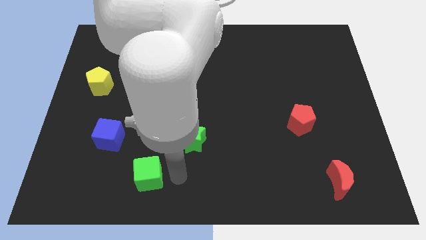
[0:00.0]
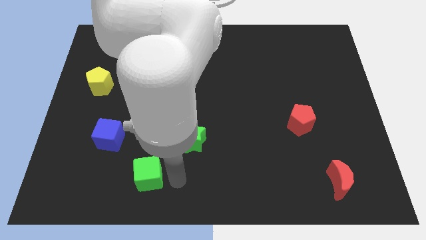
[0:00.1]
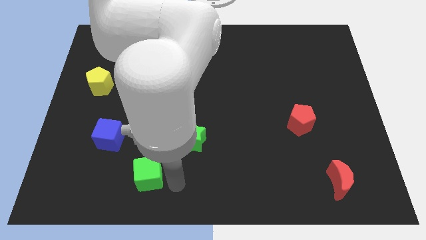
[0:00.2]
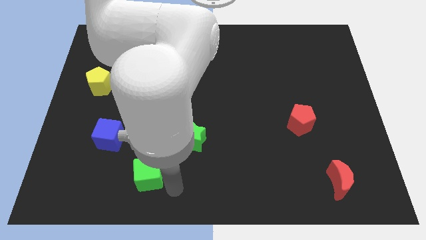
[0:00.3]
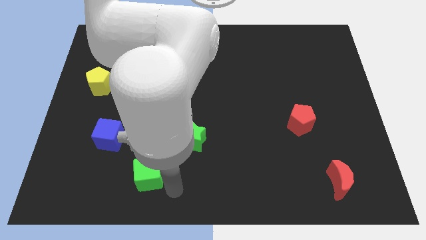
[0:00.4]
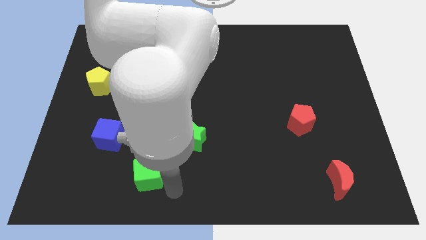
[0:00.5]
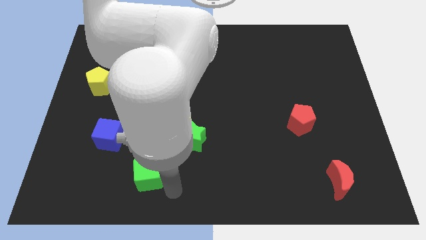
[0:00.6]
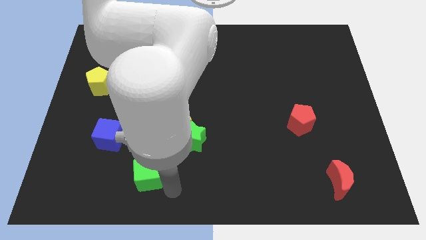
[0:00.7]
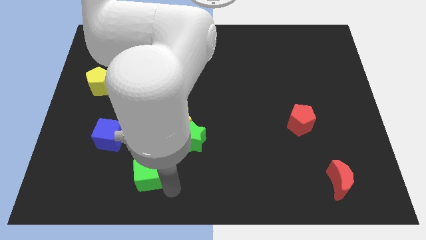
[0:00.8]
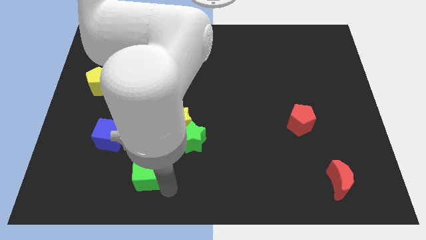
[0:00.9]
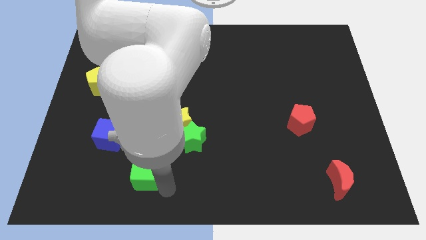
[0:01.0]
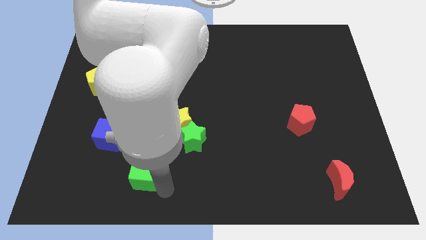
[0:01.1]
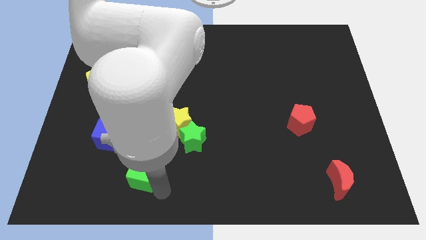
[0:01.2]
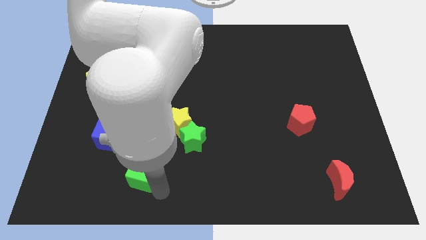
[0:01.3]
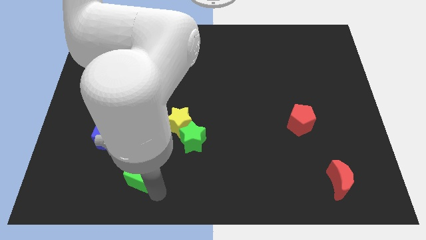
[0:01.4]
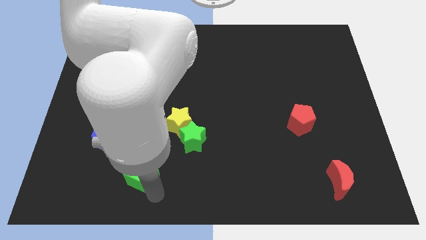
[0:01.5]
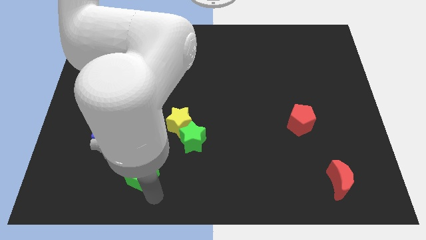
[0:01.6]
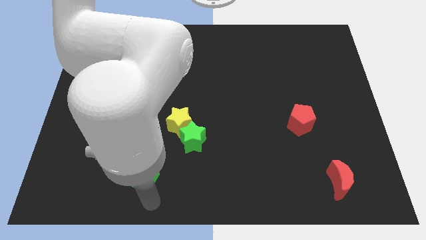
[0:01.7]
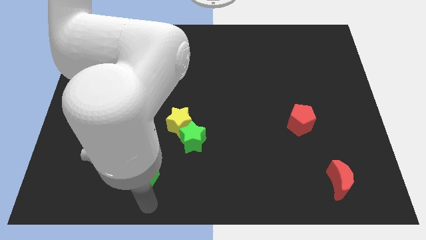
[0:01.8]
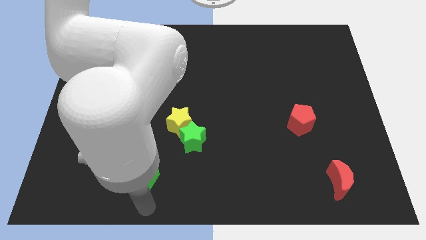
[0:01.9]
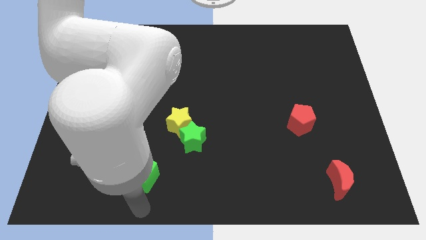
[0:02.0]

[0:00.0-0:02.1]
push the green cube slightly left

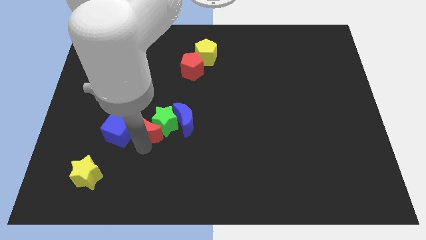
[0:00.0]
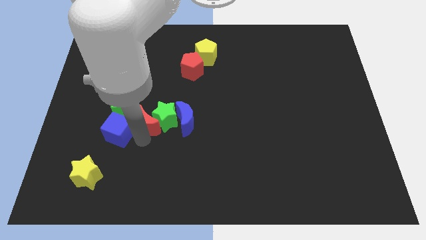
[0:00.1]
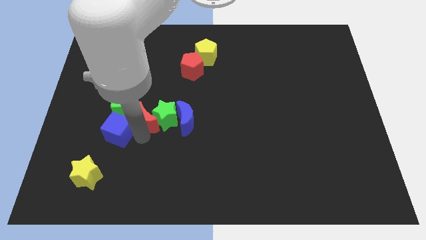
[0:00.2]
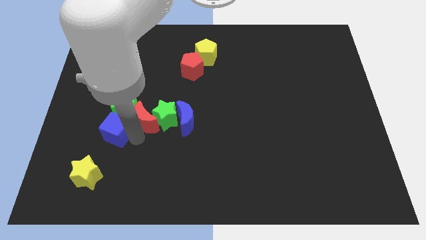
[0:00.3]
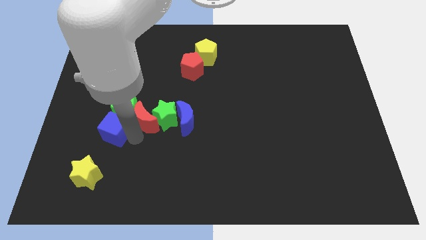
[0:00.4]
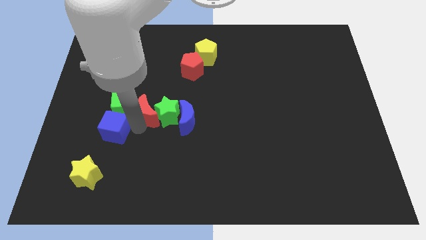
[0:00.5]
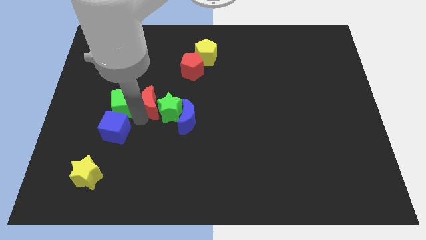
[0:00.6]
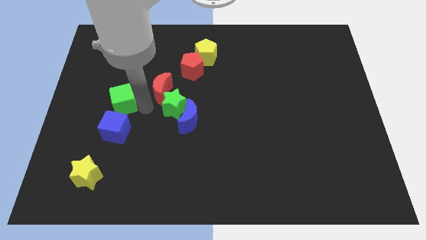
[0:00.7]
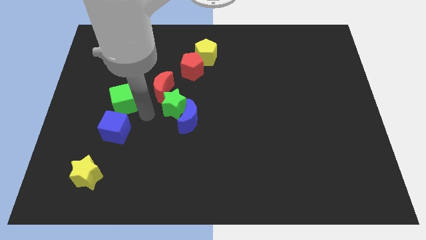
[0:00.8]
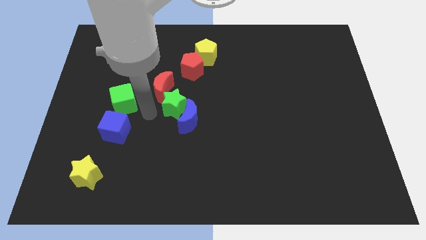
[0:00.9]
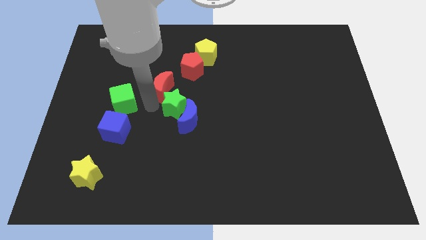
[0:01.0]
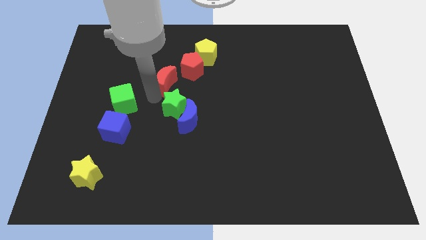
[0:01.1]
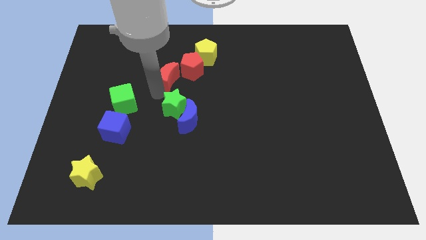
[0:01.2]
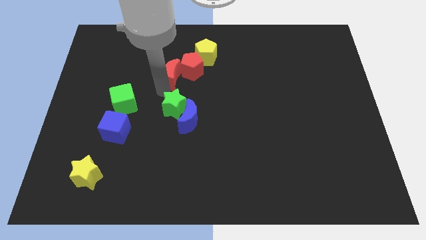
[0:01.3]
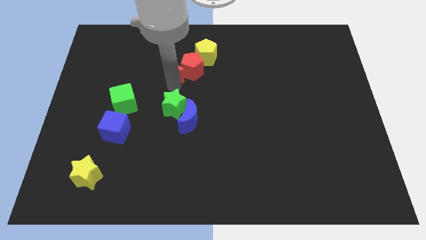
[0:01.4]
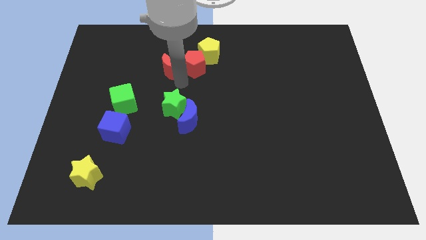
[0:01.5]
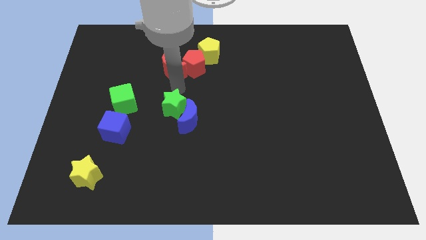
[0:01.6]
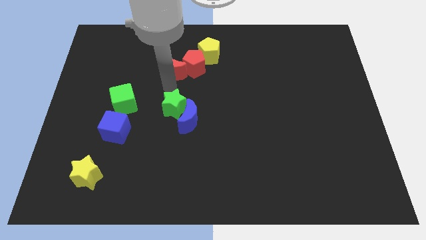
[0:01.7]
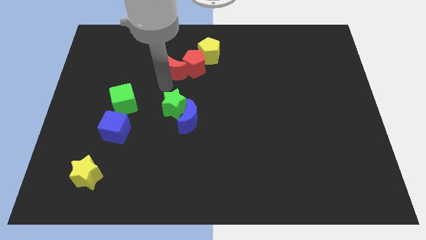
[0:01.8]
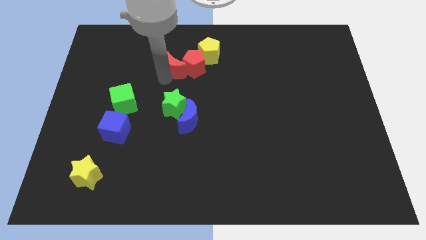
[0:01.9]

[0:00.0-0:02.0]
push the red moon diagonal into red pentagon

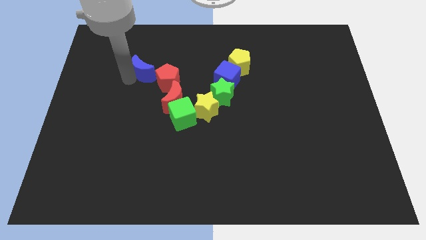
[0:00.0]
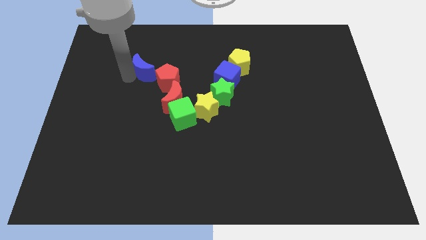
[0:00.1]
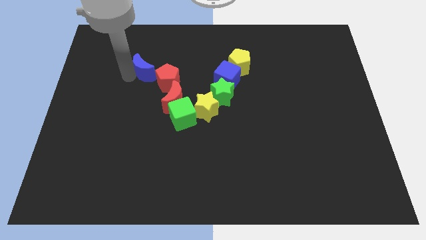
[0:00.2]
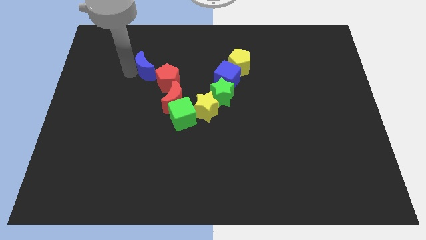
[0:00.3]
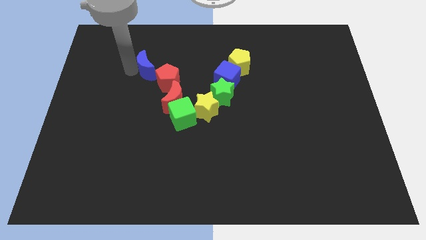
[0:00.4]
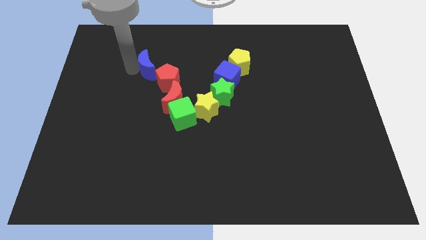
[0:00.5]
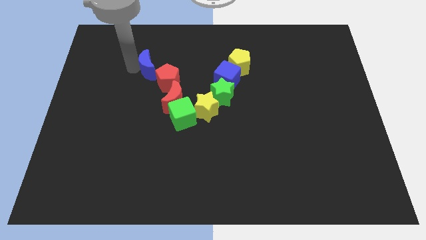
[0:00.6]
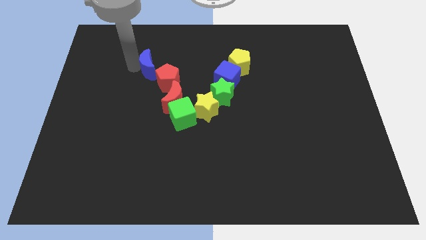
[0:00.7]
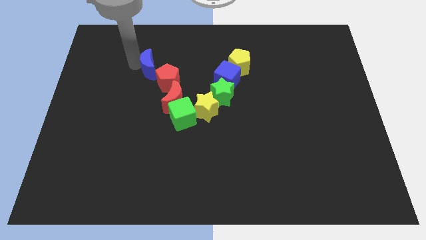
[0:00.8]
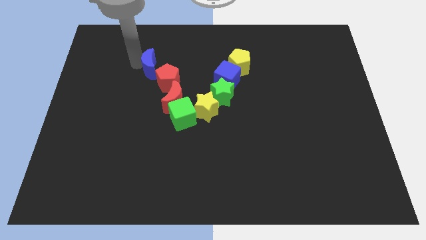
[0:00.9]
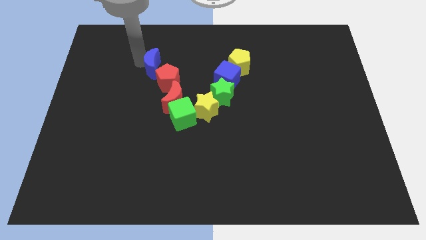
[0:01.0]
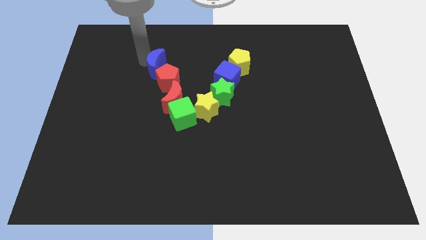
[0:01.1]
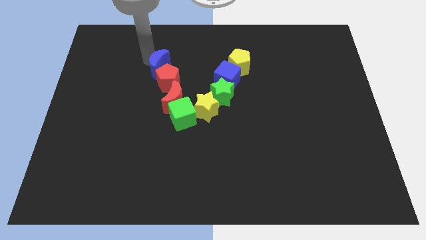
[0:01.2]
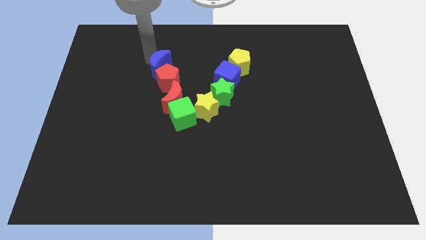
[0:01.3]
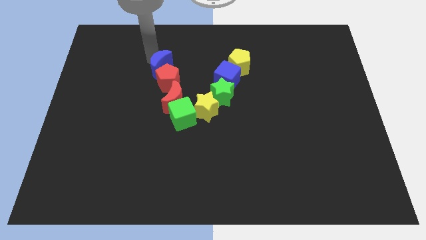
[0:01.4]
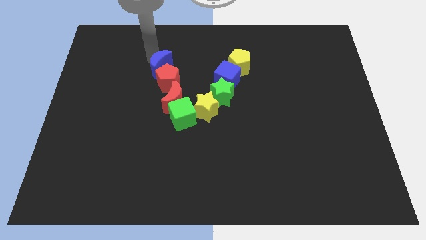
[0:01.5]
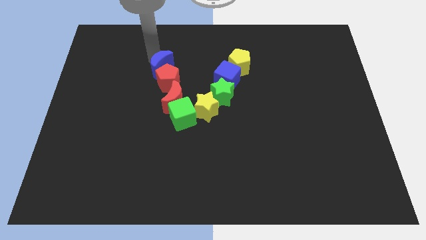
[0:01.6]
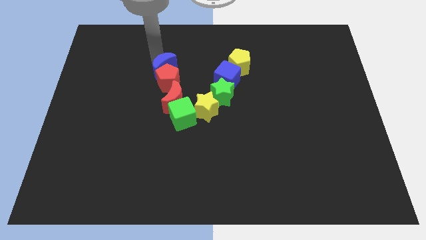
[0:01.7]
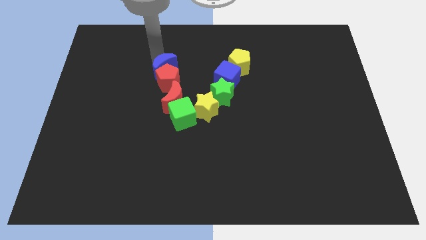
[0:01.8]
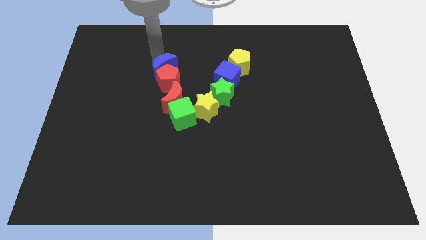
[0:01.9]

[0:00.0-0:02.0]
move the blue crescent above the red petnagon

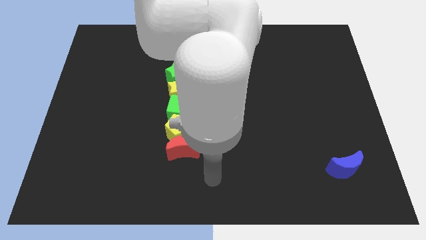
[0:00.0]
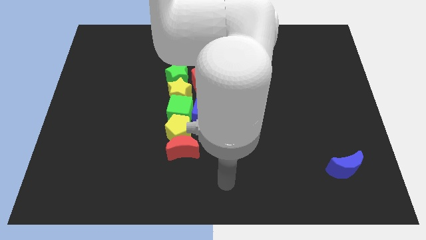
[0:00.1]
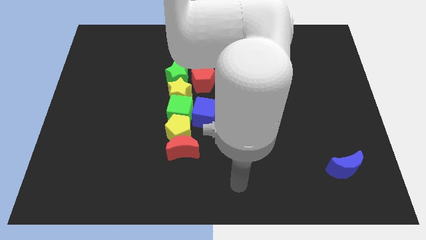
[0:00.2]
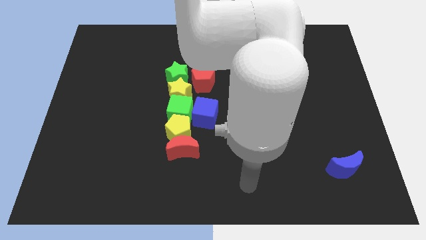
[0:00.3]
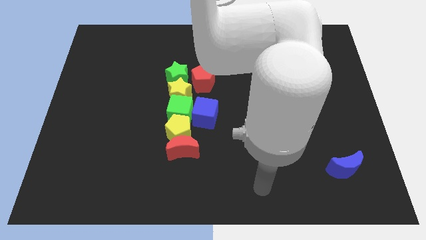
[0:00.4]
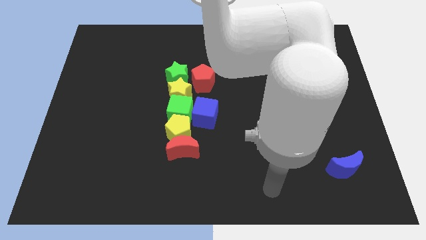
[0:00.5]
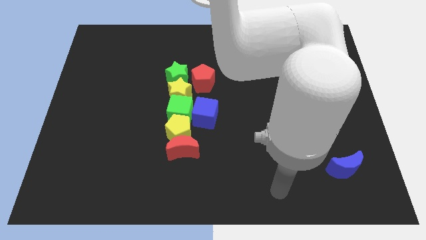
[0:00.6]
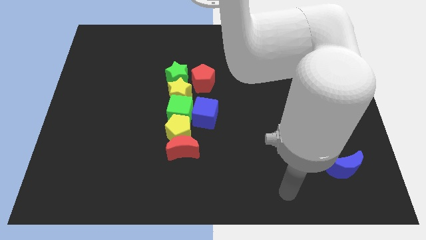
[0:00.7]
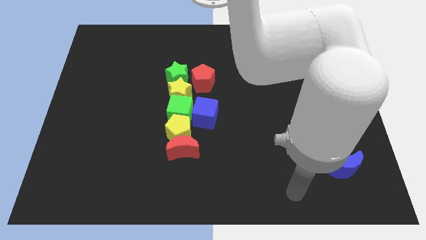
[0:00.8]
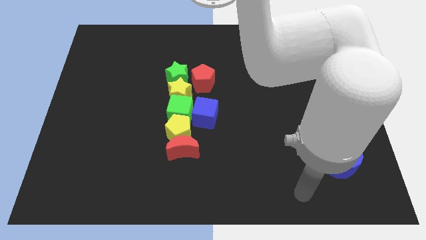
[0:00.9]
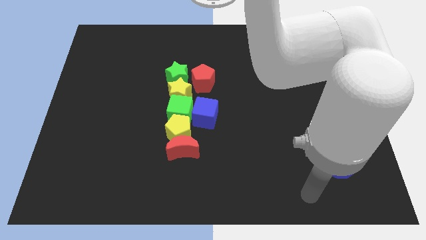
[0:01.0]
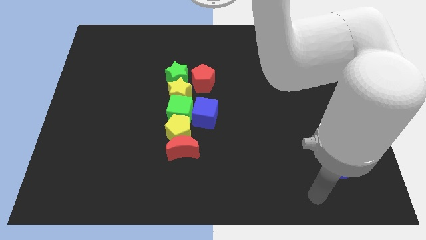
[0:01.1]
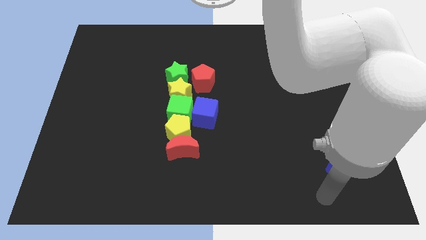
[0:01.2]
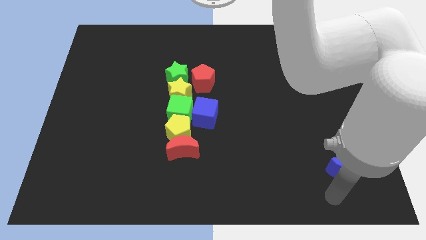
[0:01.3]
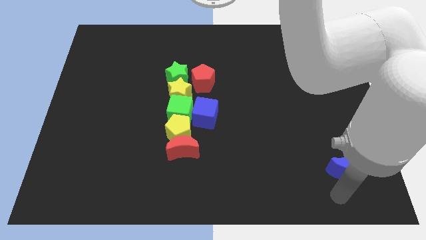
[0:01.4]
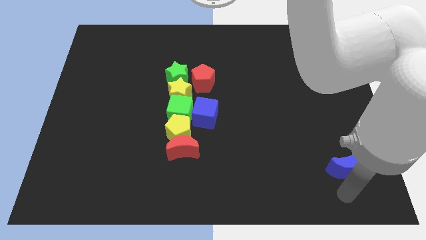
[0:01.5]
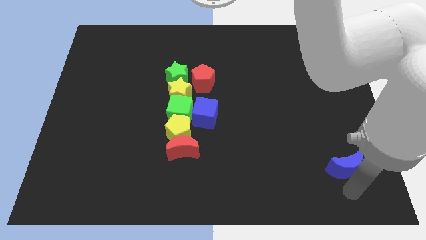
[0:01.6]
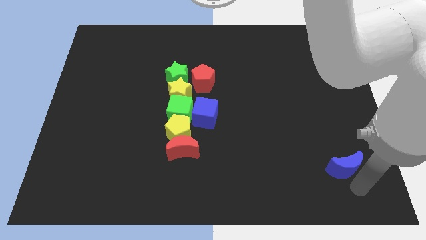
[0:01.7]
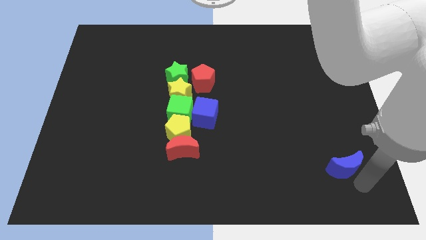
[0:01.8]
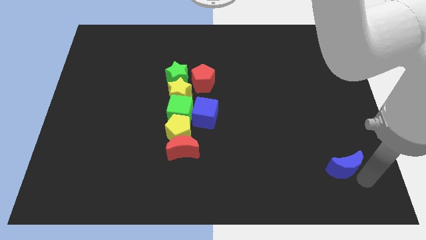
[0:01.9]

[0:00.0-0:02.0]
point your arm below the blue moon

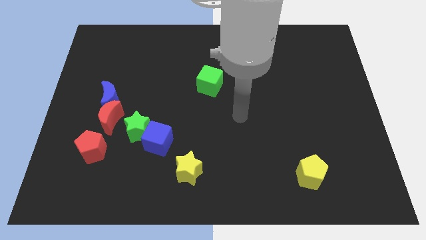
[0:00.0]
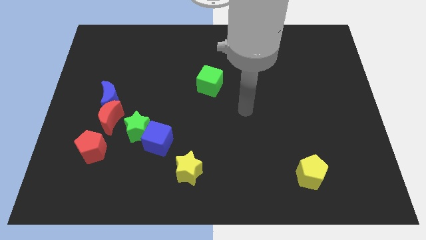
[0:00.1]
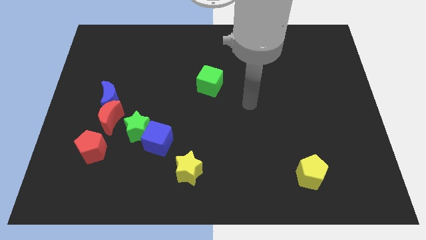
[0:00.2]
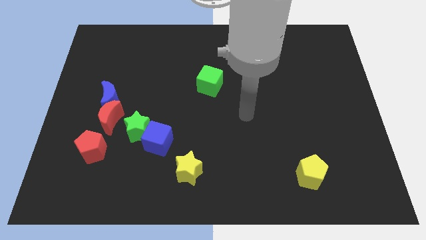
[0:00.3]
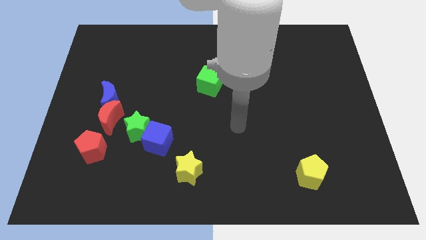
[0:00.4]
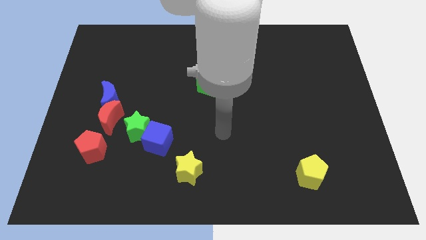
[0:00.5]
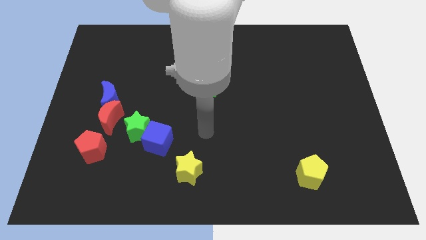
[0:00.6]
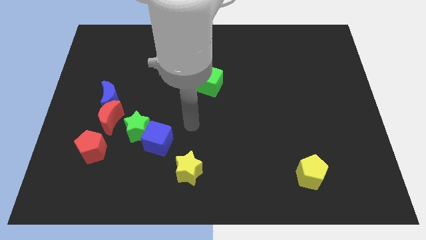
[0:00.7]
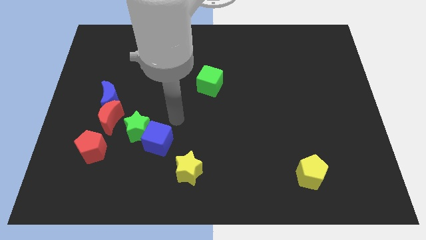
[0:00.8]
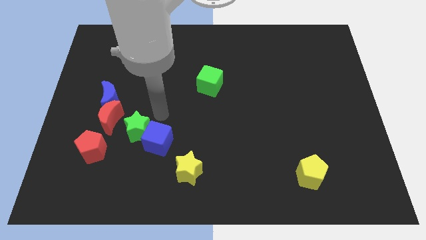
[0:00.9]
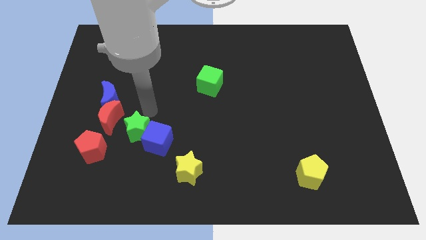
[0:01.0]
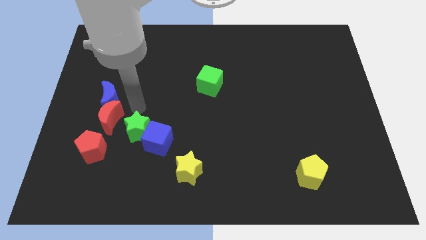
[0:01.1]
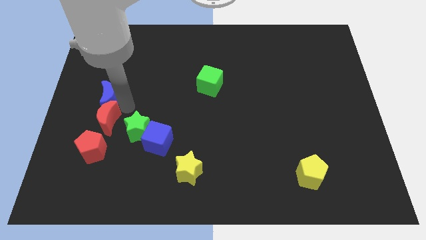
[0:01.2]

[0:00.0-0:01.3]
move your arm to the top of green star
